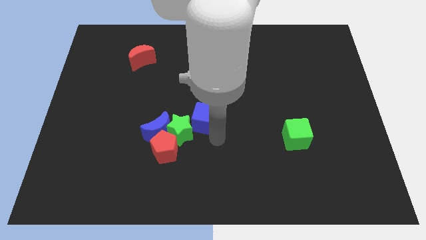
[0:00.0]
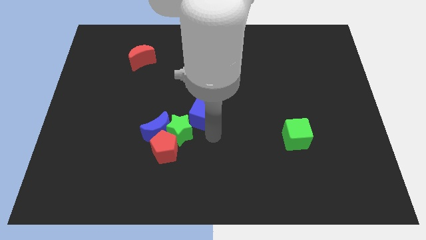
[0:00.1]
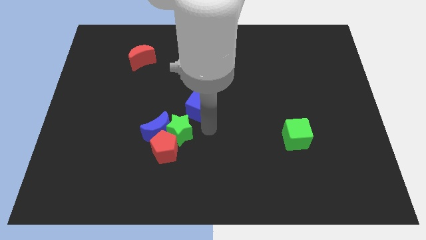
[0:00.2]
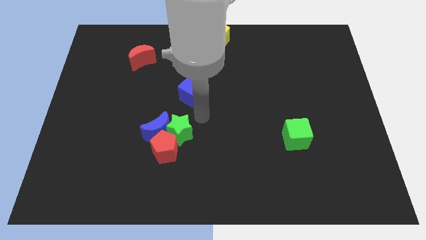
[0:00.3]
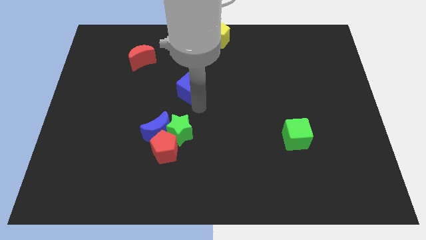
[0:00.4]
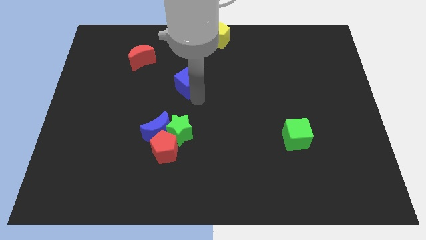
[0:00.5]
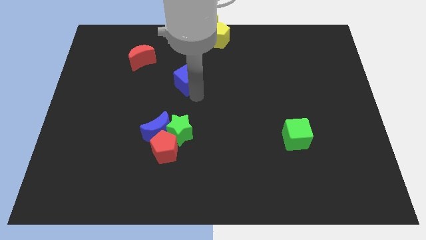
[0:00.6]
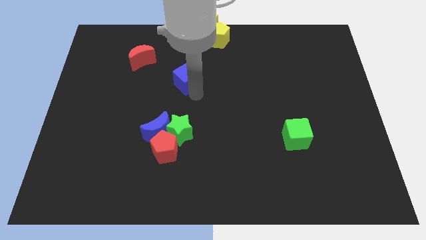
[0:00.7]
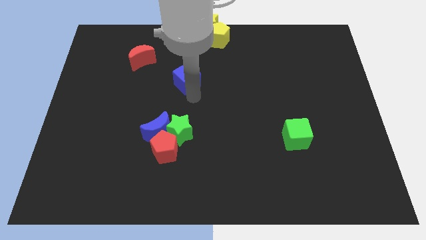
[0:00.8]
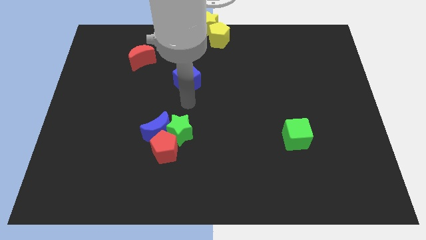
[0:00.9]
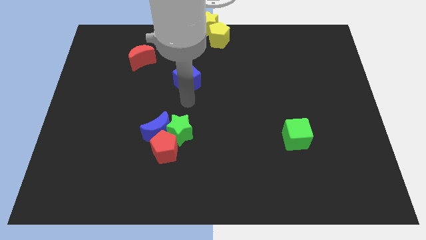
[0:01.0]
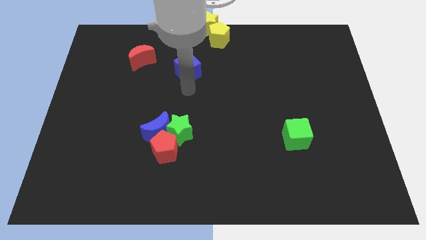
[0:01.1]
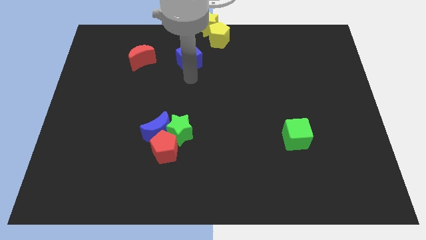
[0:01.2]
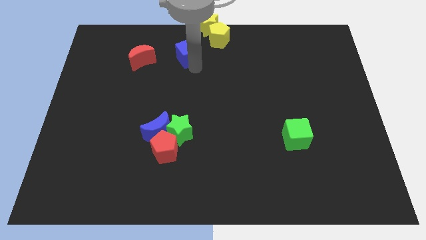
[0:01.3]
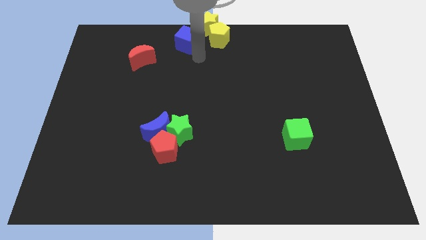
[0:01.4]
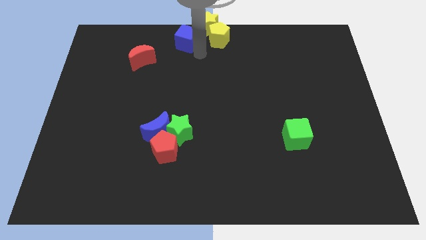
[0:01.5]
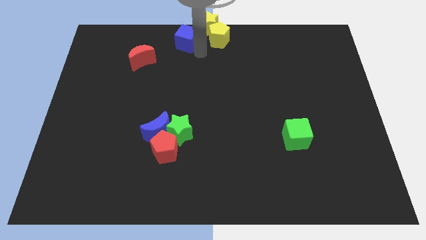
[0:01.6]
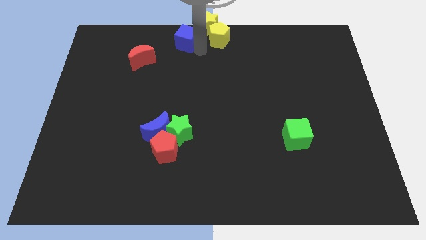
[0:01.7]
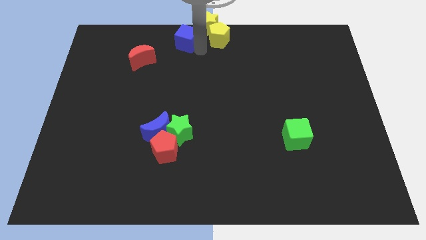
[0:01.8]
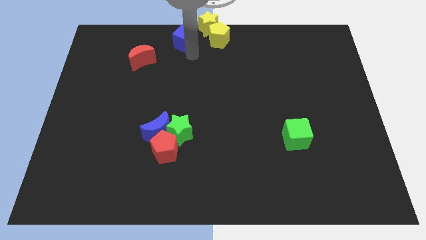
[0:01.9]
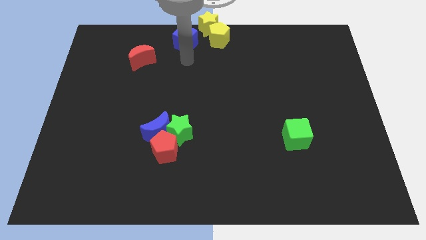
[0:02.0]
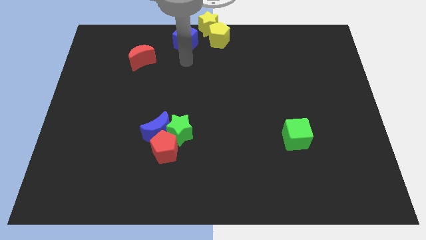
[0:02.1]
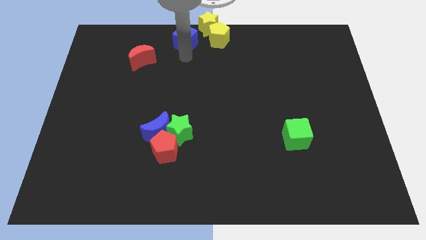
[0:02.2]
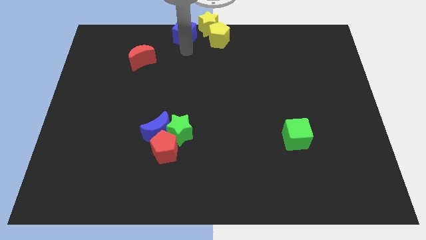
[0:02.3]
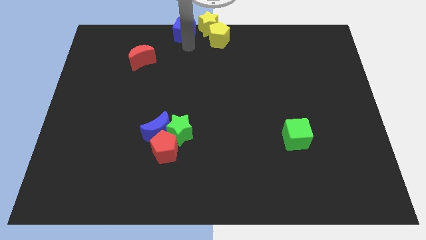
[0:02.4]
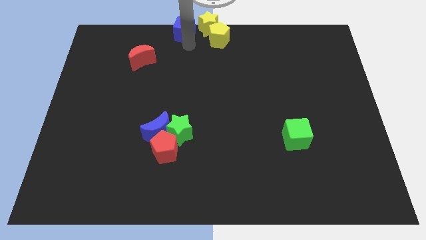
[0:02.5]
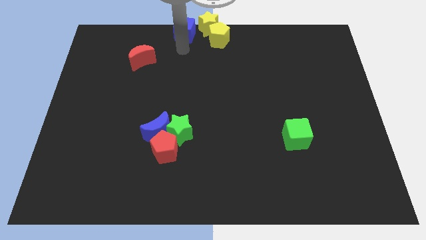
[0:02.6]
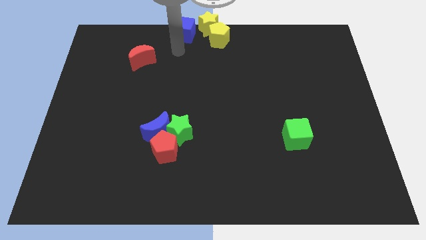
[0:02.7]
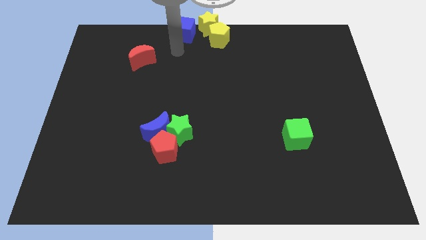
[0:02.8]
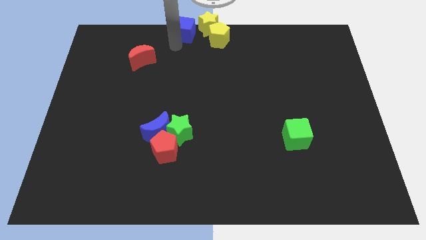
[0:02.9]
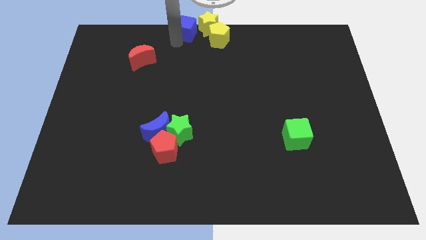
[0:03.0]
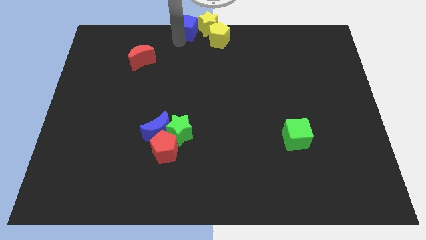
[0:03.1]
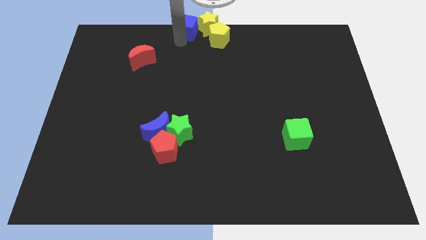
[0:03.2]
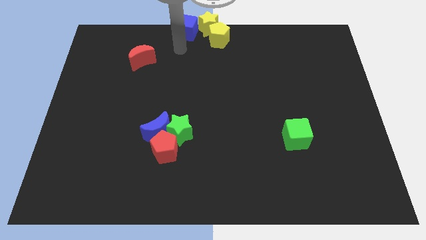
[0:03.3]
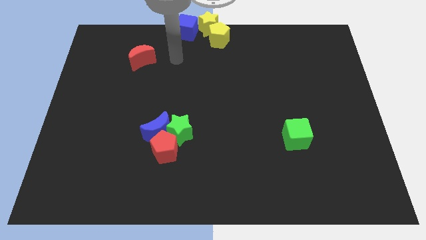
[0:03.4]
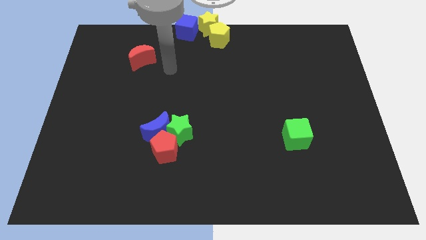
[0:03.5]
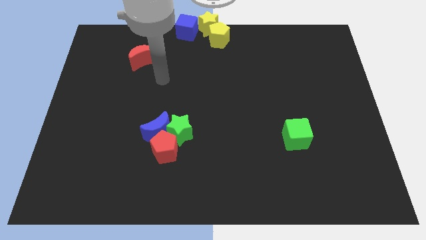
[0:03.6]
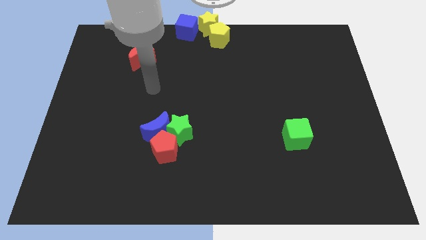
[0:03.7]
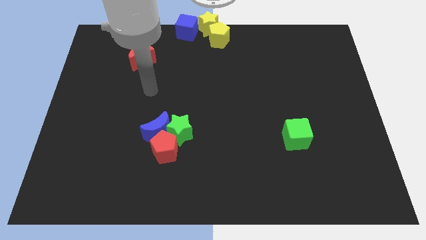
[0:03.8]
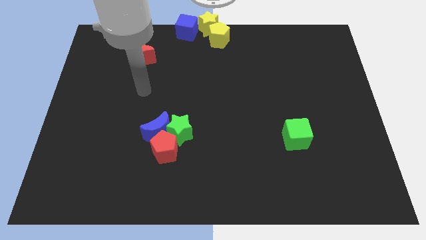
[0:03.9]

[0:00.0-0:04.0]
place blue block left of yellow star

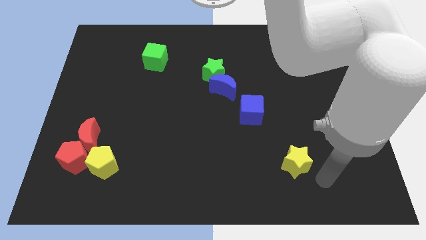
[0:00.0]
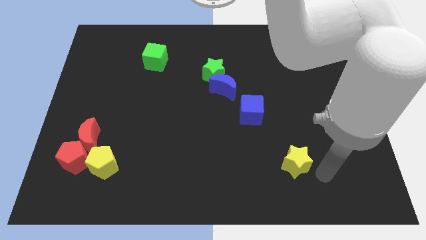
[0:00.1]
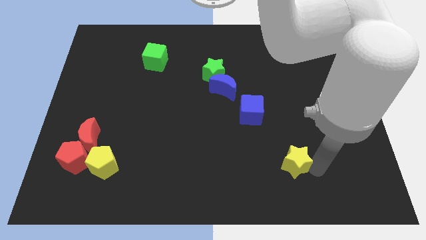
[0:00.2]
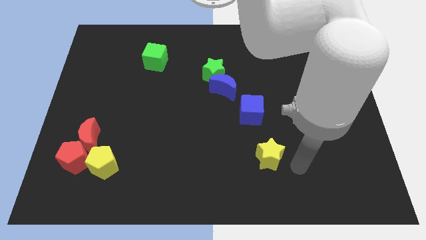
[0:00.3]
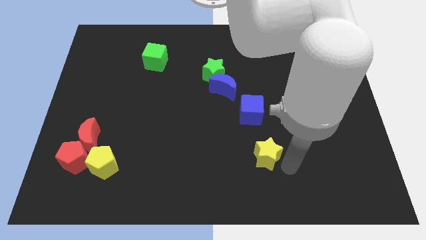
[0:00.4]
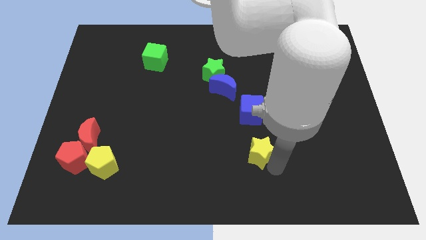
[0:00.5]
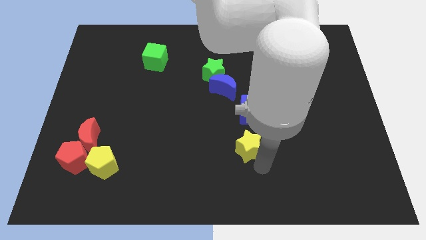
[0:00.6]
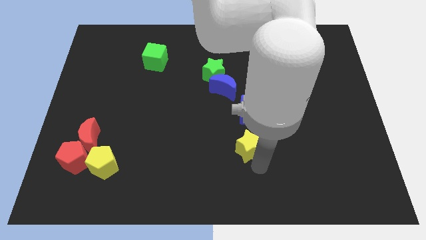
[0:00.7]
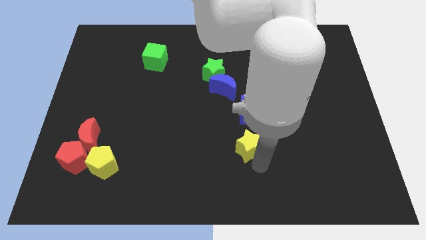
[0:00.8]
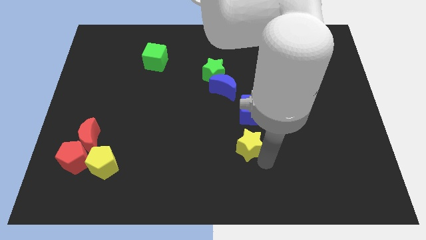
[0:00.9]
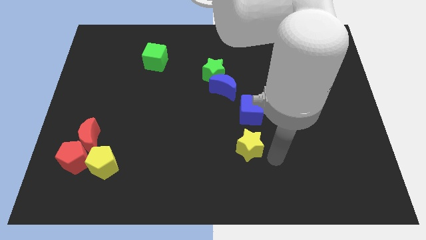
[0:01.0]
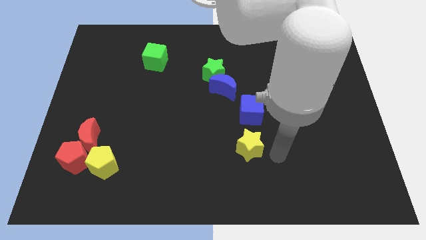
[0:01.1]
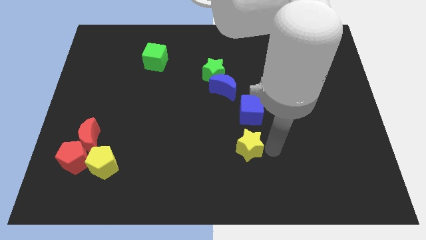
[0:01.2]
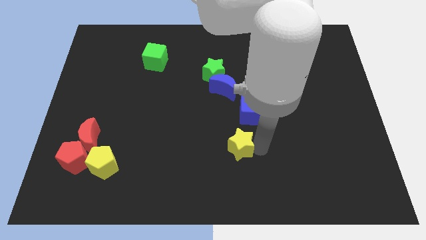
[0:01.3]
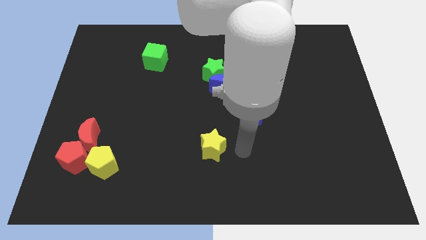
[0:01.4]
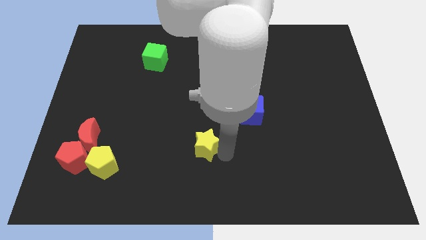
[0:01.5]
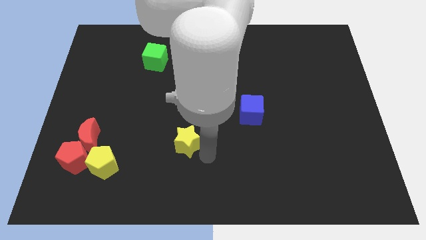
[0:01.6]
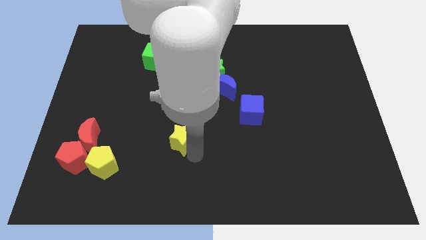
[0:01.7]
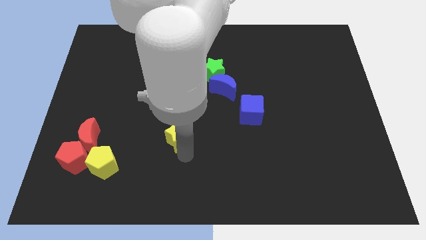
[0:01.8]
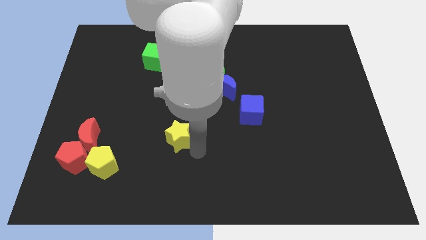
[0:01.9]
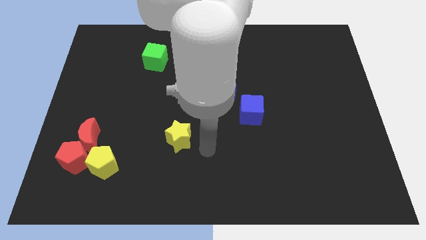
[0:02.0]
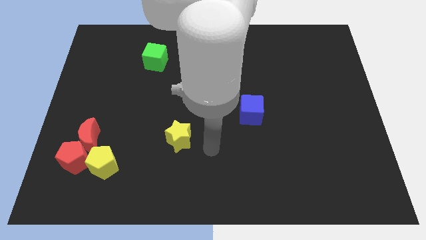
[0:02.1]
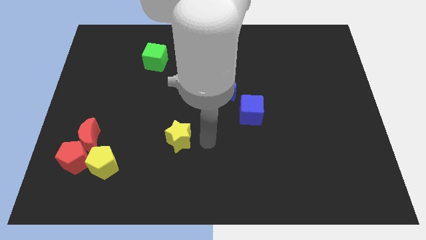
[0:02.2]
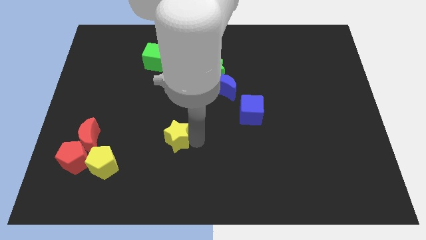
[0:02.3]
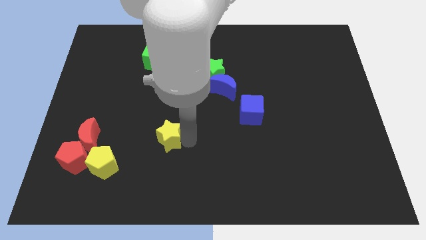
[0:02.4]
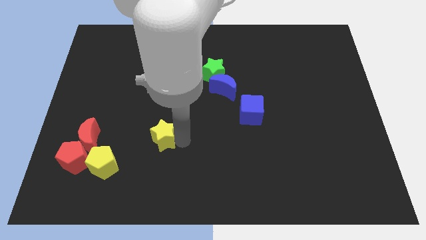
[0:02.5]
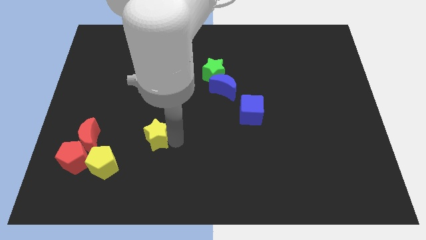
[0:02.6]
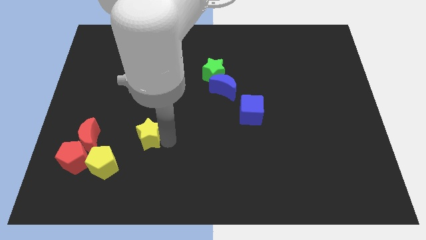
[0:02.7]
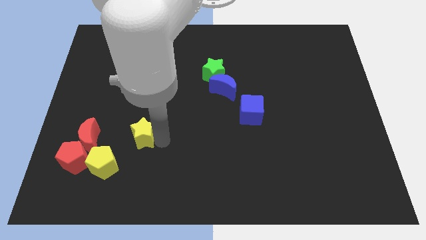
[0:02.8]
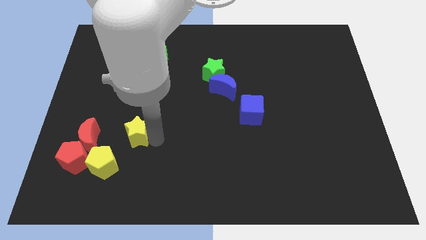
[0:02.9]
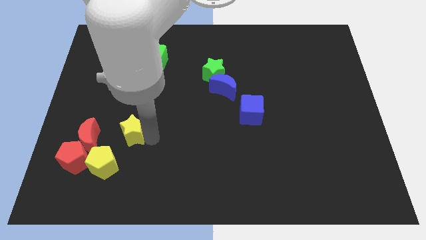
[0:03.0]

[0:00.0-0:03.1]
slide yellow star towards red moon

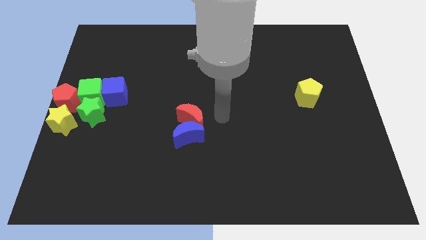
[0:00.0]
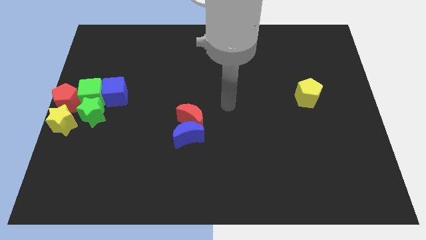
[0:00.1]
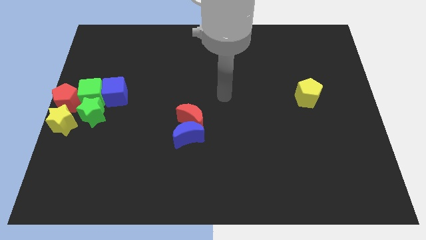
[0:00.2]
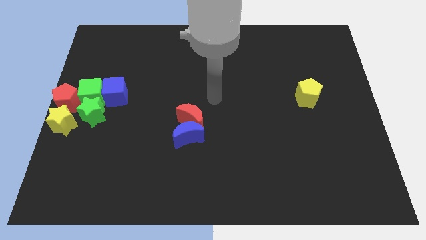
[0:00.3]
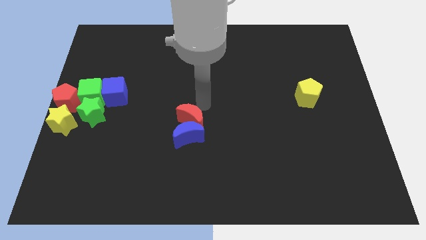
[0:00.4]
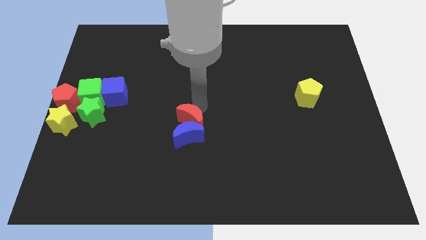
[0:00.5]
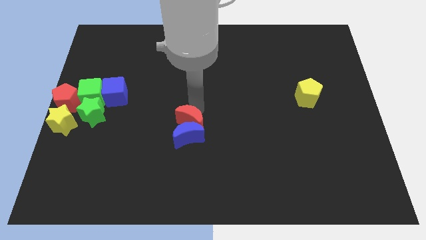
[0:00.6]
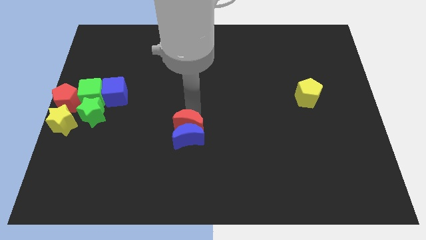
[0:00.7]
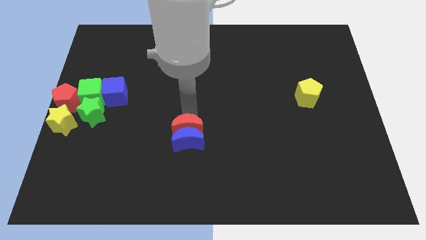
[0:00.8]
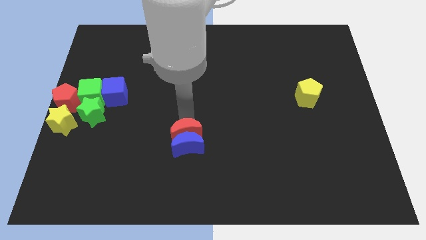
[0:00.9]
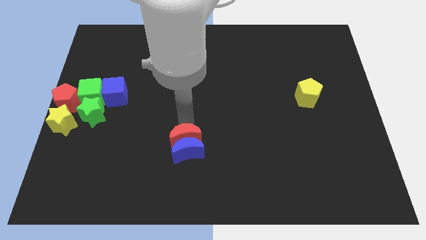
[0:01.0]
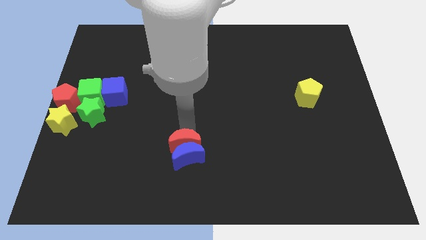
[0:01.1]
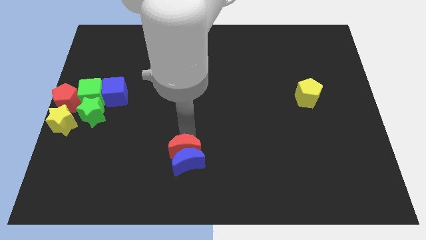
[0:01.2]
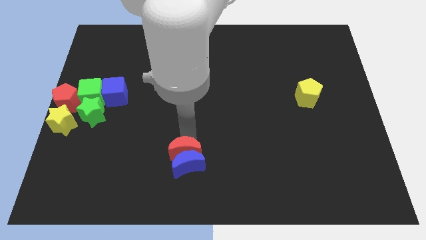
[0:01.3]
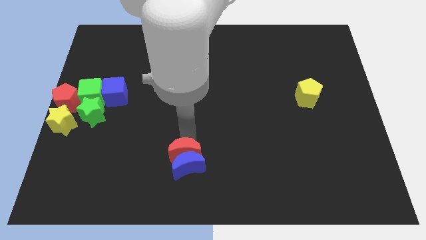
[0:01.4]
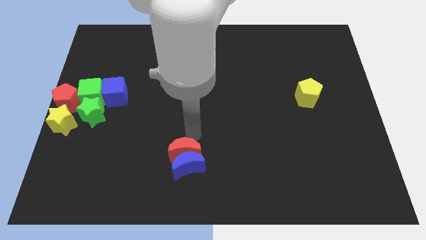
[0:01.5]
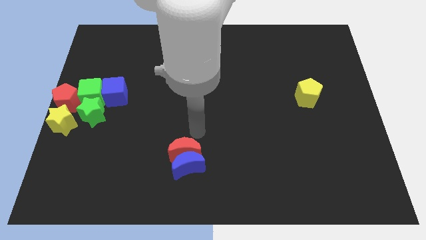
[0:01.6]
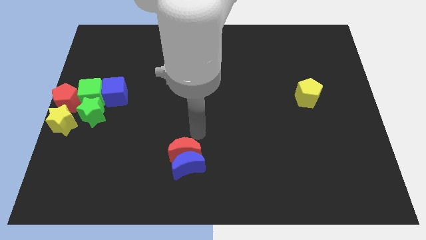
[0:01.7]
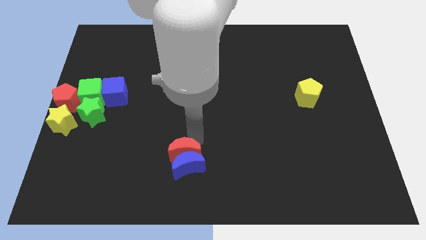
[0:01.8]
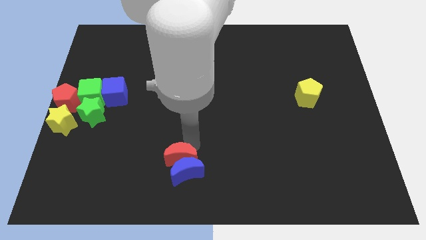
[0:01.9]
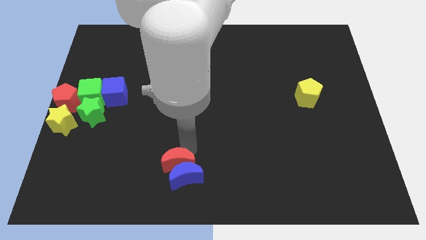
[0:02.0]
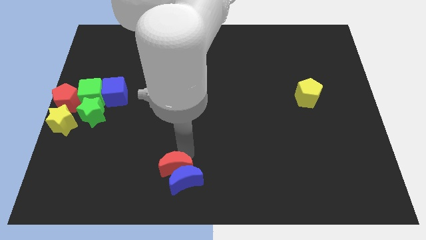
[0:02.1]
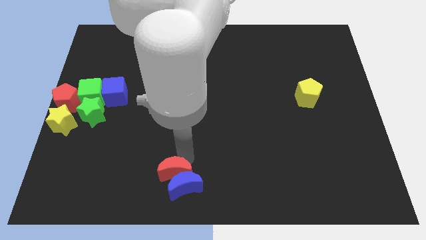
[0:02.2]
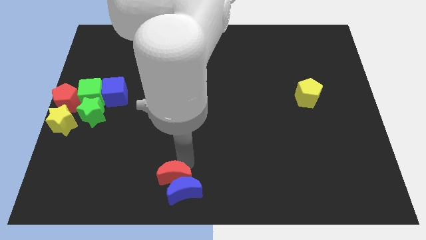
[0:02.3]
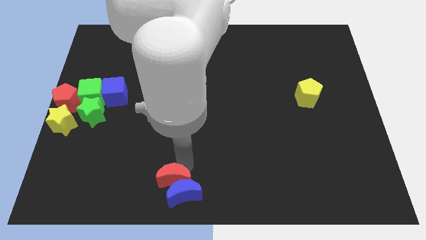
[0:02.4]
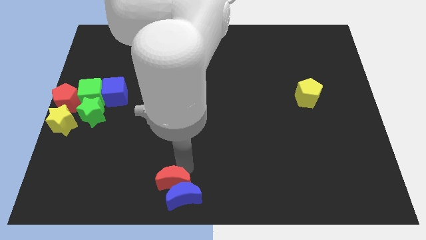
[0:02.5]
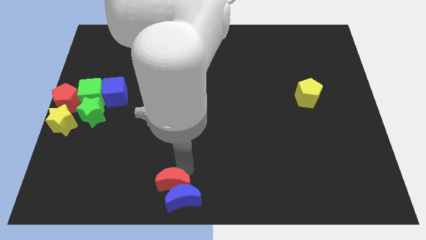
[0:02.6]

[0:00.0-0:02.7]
push the red moon blue crescent to the center bottom
